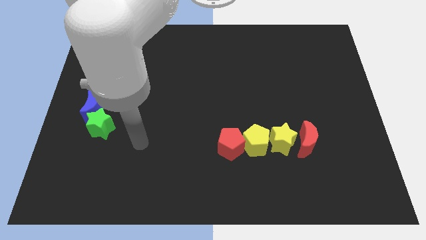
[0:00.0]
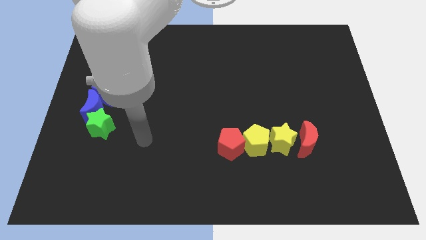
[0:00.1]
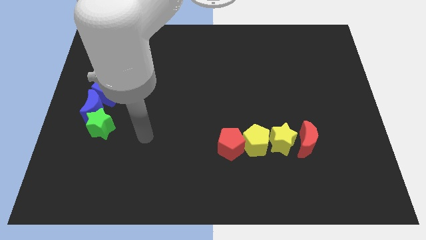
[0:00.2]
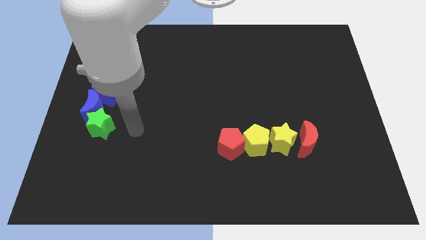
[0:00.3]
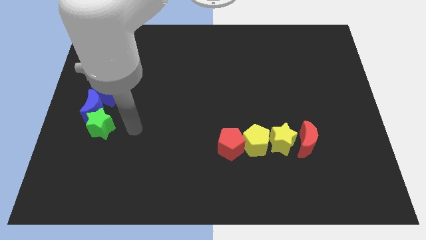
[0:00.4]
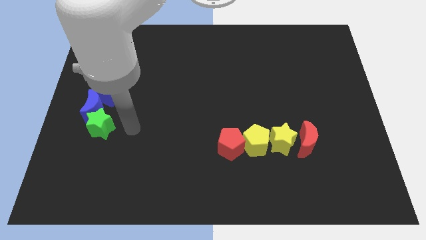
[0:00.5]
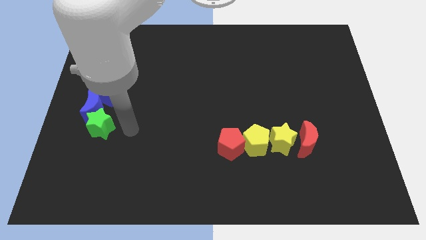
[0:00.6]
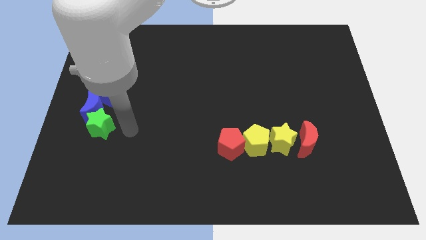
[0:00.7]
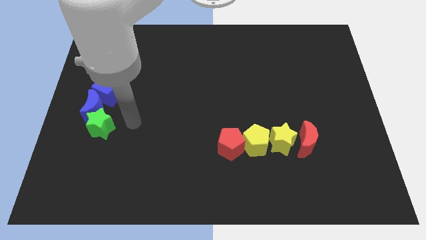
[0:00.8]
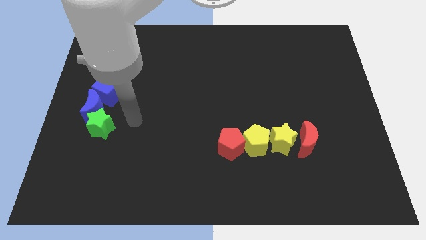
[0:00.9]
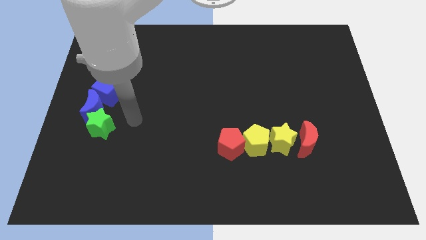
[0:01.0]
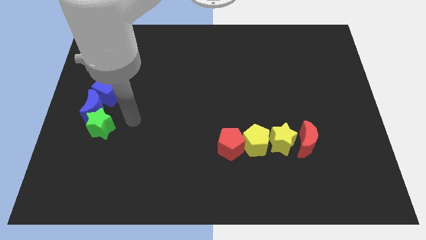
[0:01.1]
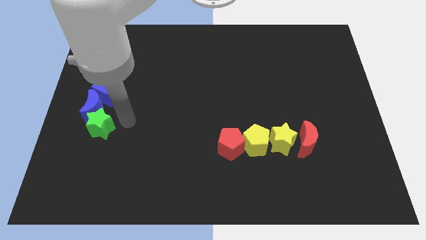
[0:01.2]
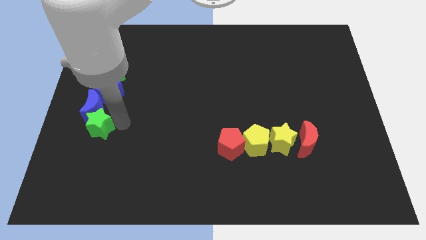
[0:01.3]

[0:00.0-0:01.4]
place the arm right to the green star

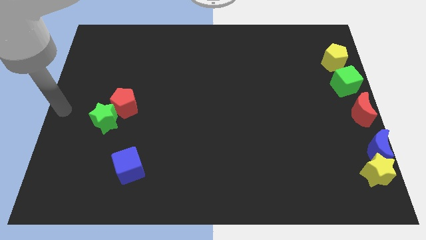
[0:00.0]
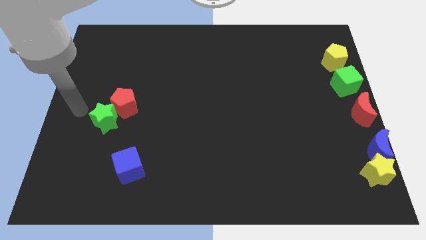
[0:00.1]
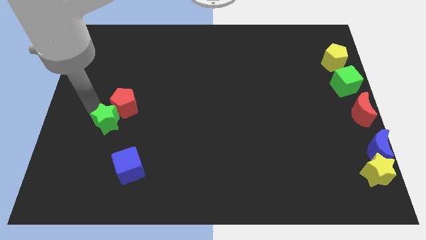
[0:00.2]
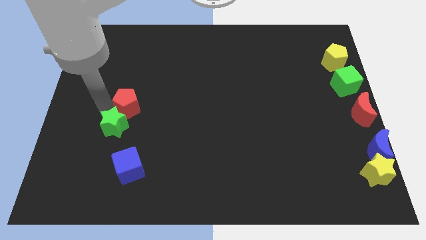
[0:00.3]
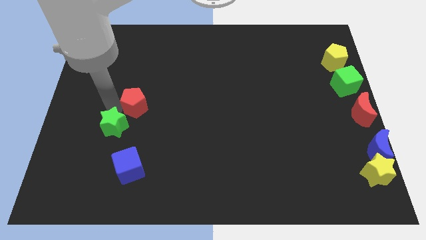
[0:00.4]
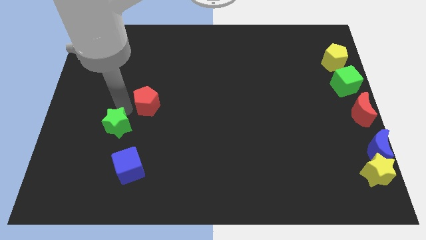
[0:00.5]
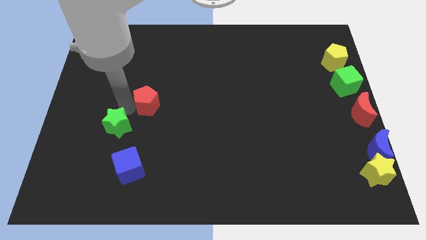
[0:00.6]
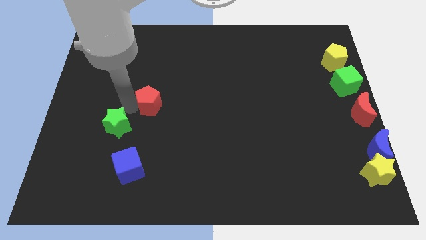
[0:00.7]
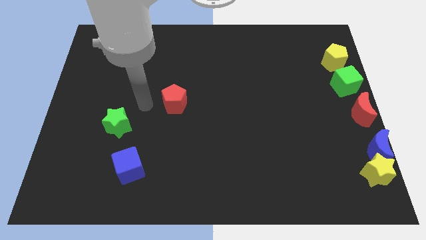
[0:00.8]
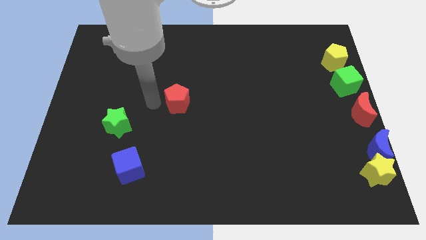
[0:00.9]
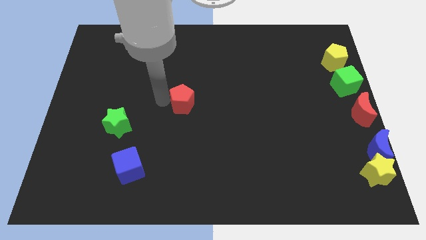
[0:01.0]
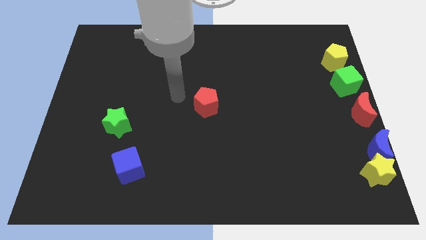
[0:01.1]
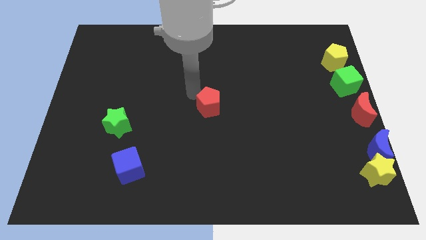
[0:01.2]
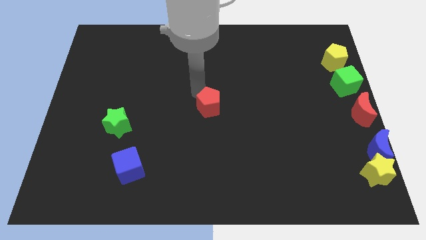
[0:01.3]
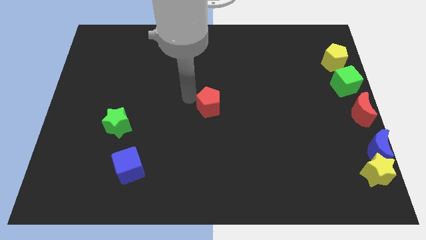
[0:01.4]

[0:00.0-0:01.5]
move the red pentagon away from the green star

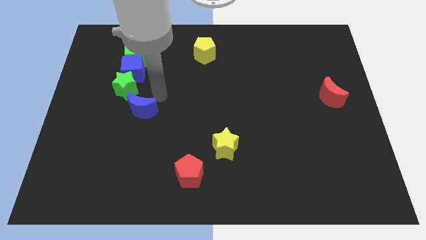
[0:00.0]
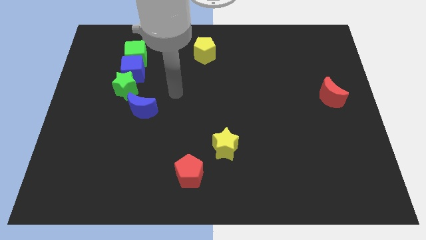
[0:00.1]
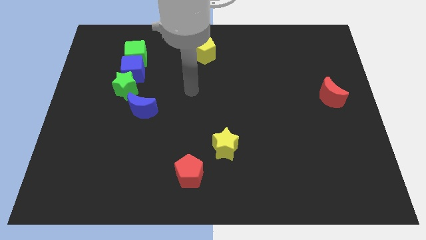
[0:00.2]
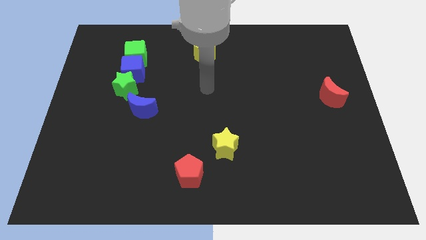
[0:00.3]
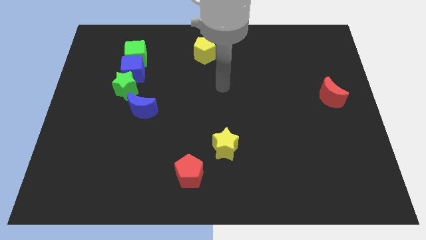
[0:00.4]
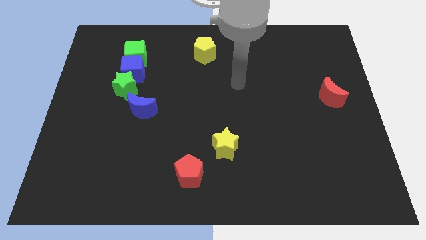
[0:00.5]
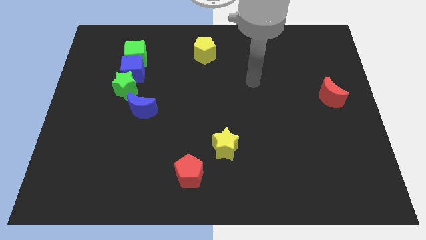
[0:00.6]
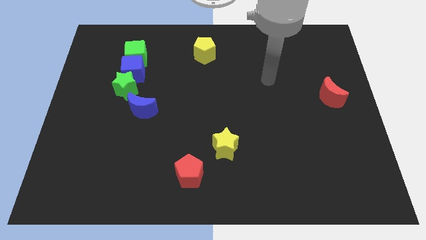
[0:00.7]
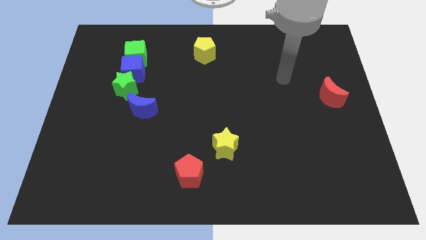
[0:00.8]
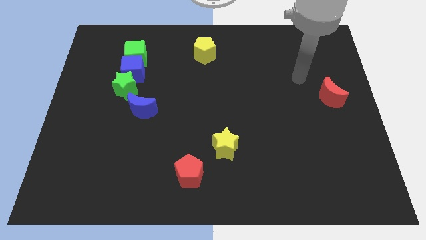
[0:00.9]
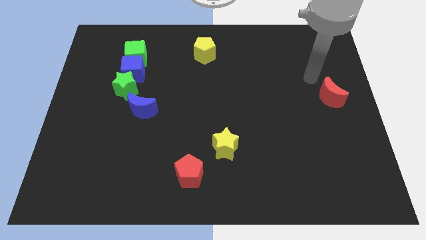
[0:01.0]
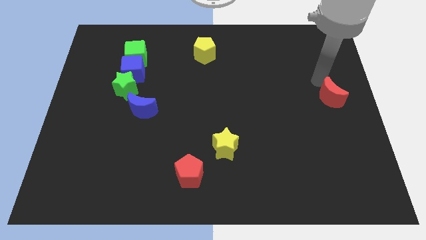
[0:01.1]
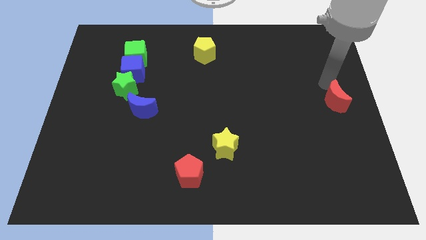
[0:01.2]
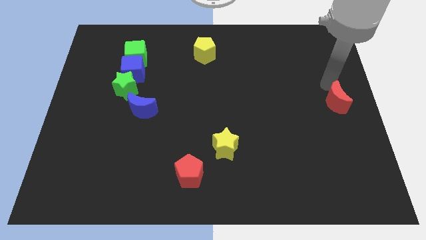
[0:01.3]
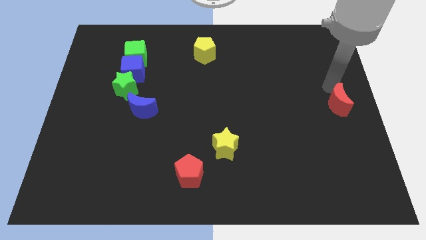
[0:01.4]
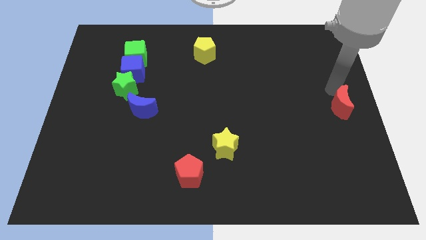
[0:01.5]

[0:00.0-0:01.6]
move the red crescent down slightly

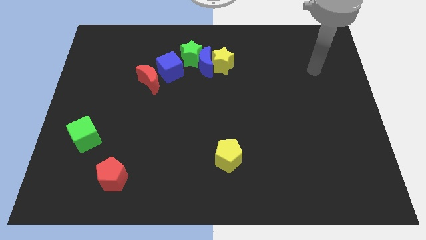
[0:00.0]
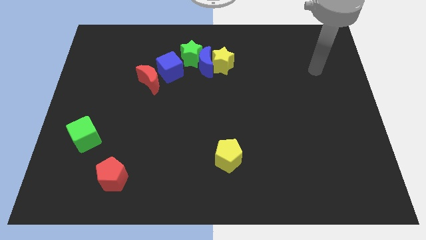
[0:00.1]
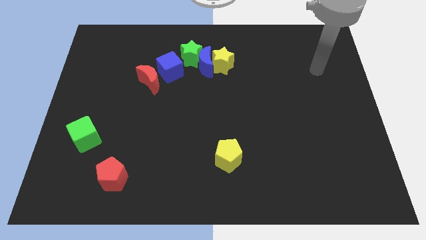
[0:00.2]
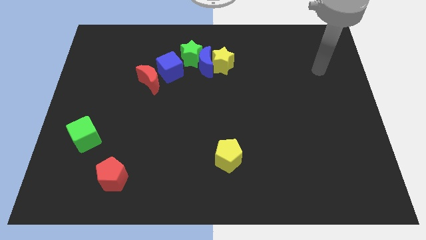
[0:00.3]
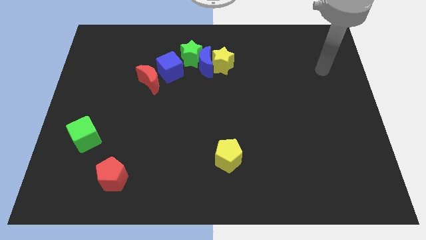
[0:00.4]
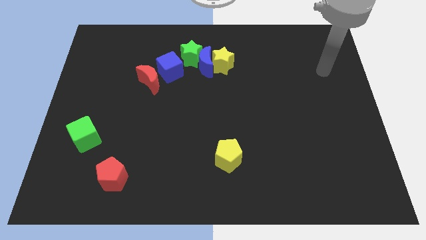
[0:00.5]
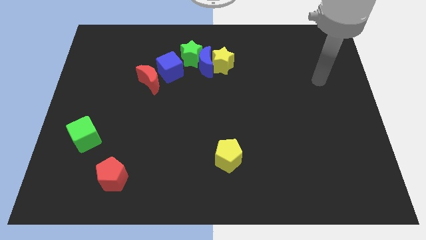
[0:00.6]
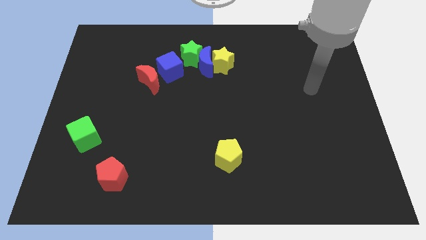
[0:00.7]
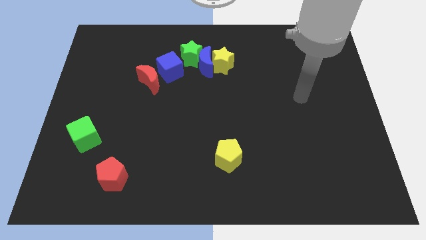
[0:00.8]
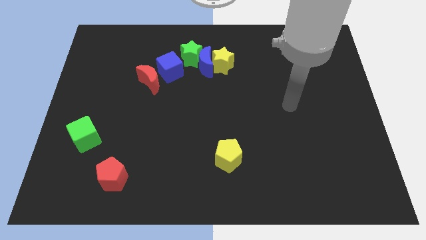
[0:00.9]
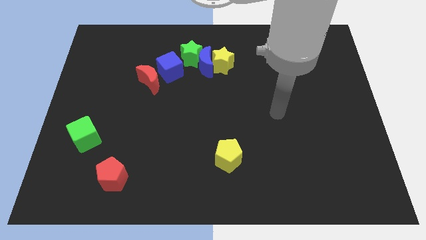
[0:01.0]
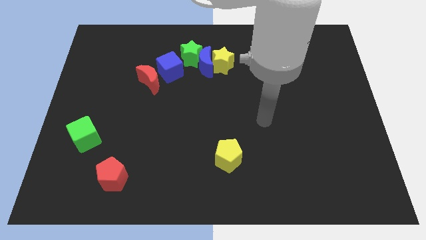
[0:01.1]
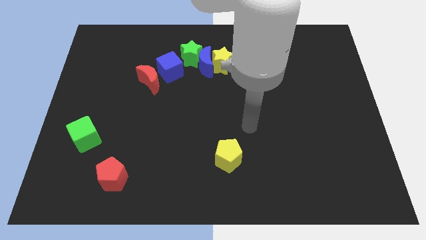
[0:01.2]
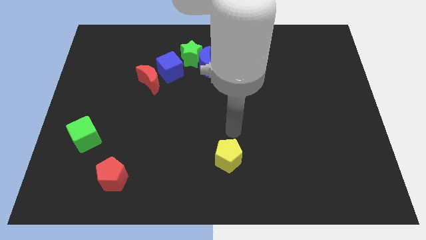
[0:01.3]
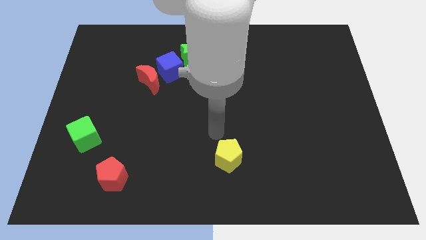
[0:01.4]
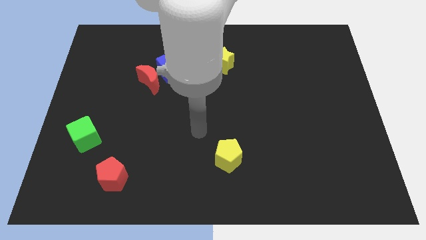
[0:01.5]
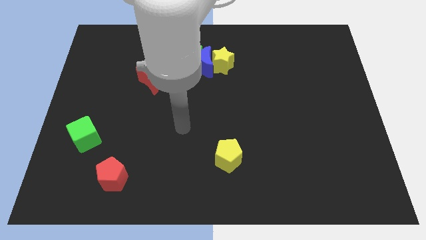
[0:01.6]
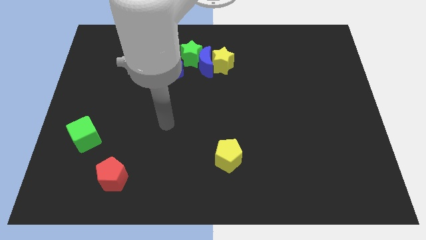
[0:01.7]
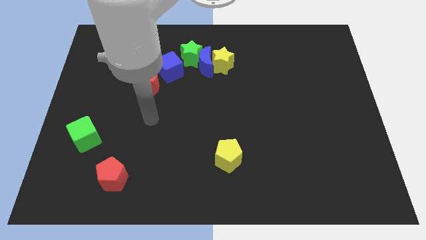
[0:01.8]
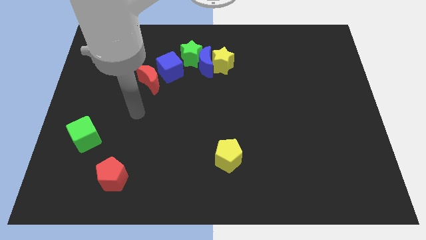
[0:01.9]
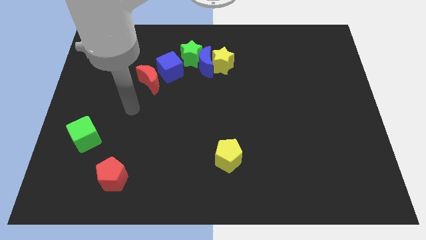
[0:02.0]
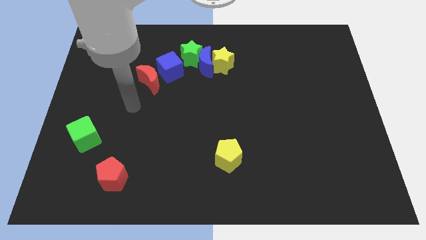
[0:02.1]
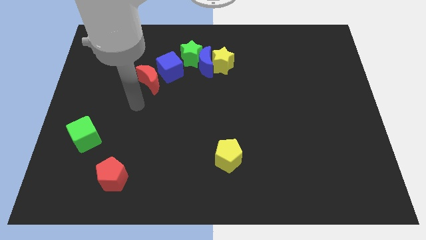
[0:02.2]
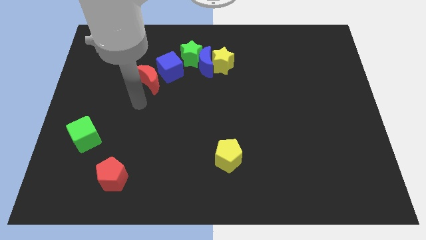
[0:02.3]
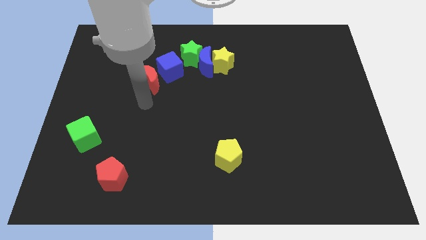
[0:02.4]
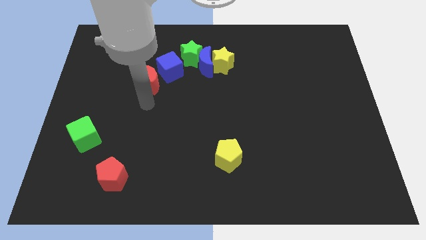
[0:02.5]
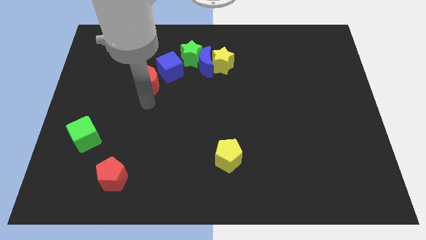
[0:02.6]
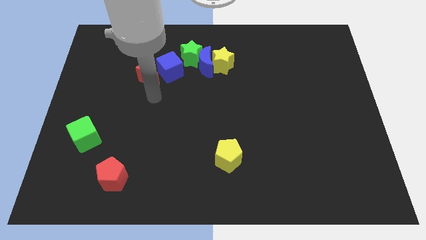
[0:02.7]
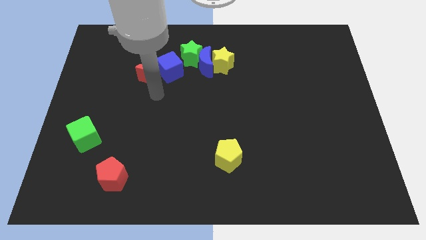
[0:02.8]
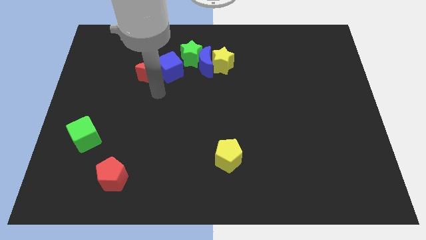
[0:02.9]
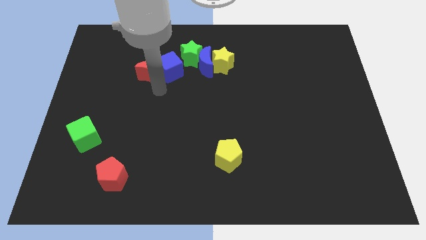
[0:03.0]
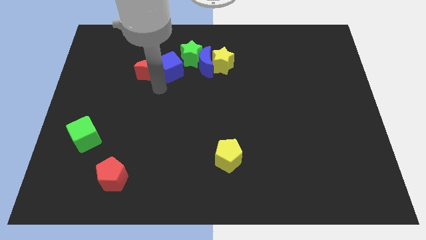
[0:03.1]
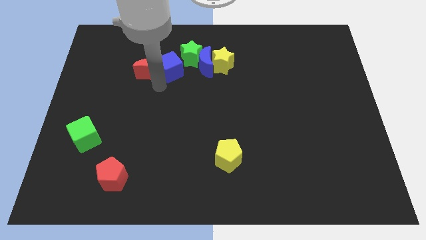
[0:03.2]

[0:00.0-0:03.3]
move the red crescent slightly upwards

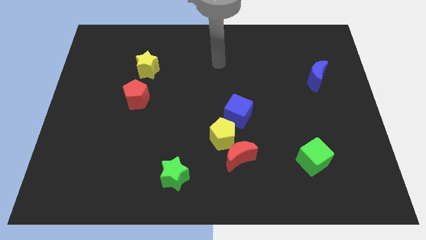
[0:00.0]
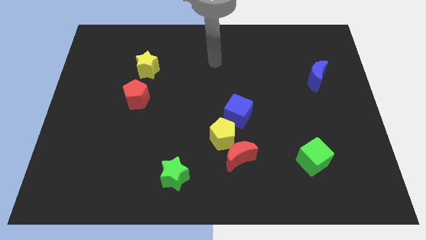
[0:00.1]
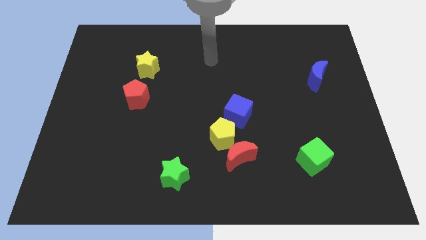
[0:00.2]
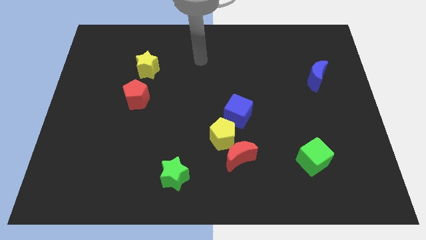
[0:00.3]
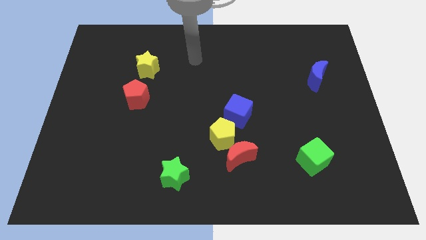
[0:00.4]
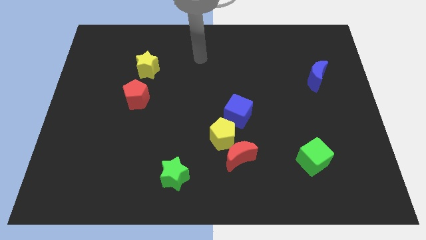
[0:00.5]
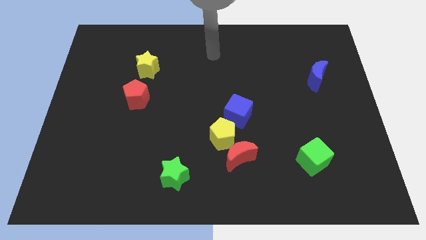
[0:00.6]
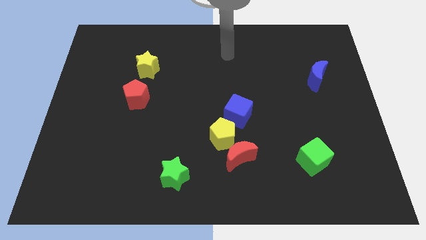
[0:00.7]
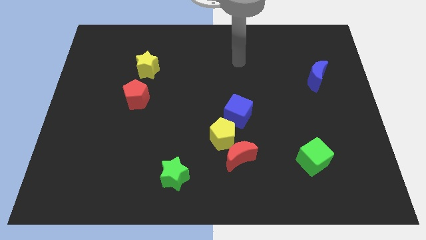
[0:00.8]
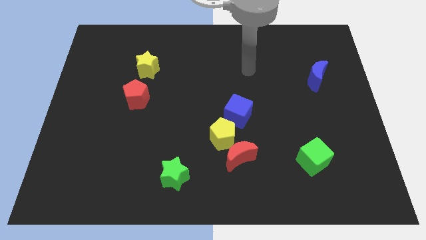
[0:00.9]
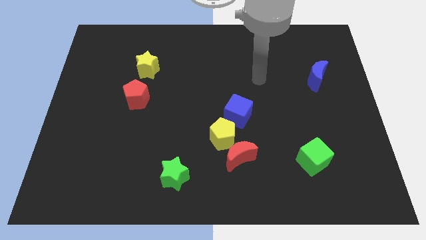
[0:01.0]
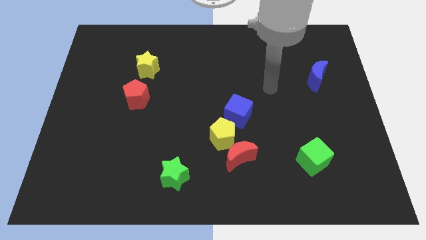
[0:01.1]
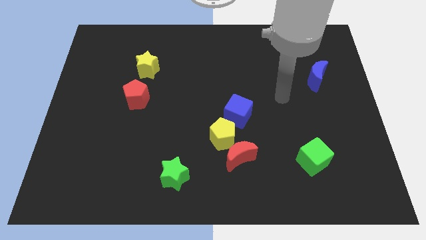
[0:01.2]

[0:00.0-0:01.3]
place your arm in between the blue blocks
